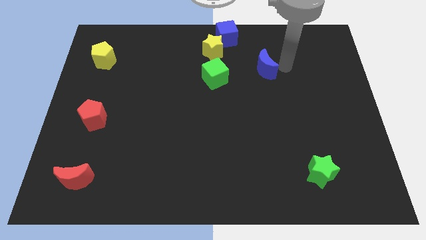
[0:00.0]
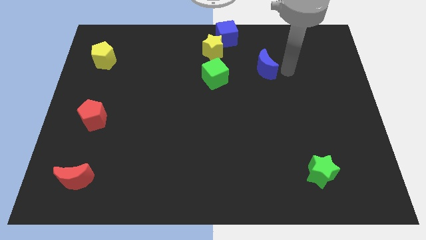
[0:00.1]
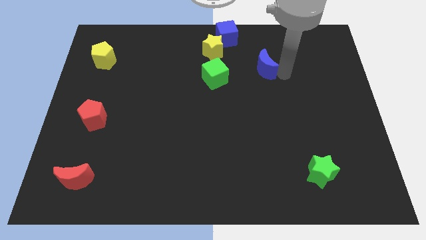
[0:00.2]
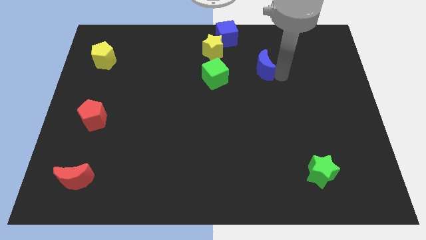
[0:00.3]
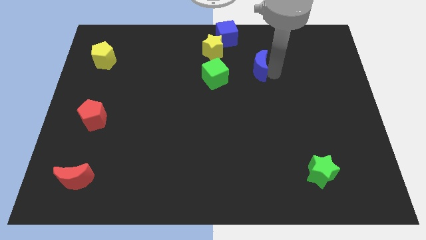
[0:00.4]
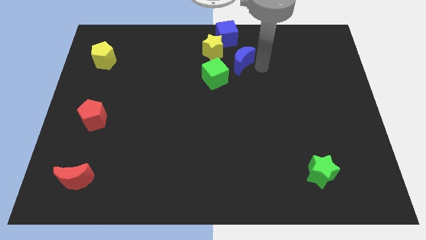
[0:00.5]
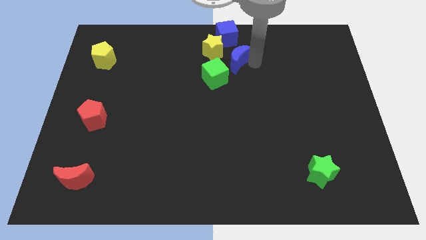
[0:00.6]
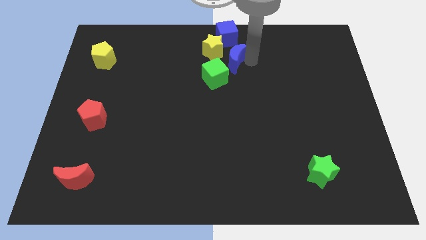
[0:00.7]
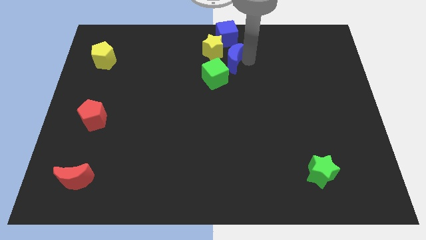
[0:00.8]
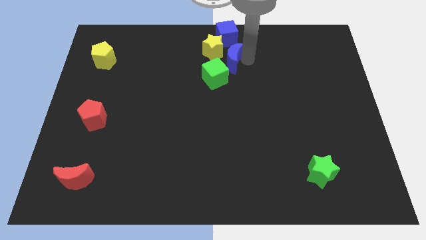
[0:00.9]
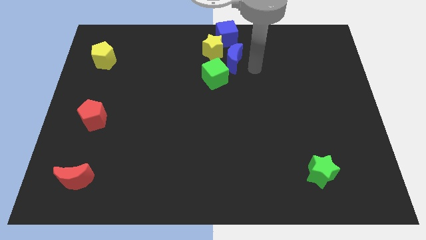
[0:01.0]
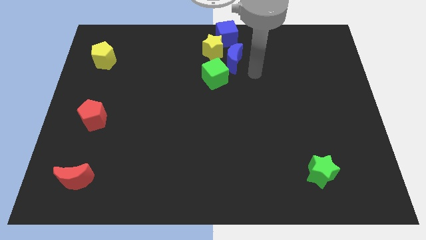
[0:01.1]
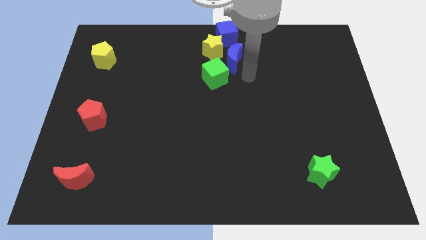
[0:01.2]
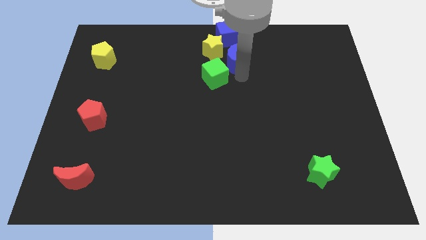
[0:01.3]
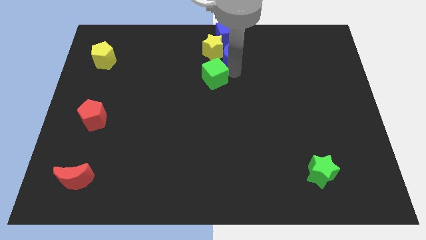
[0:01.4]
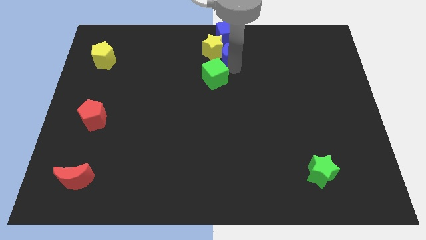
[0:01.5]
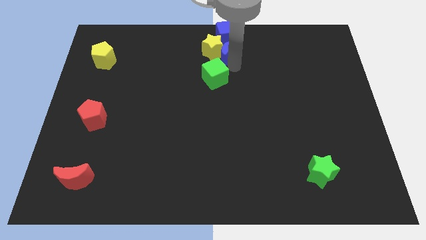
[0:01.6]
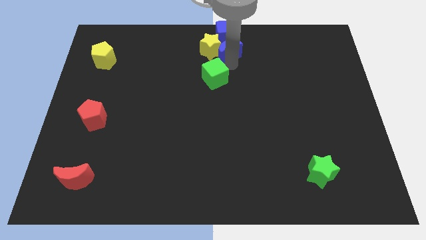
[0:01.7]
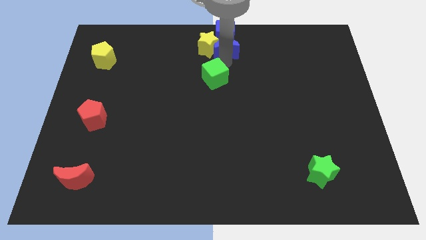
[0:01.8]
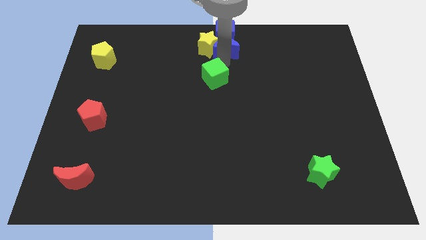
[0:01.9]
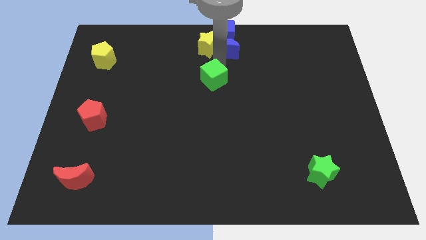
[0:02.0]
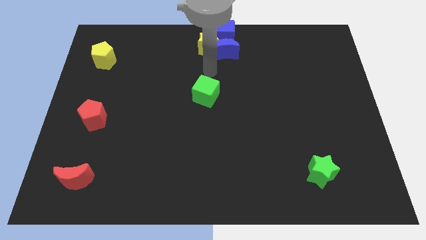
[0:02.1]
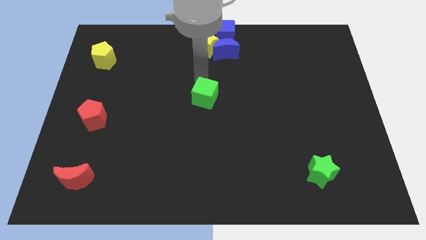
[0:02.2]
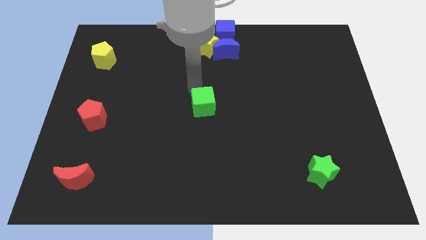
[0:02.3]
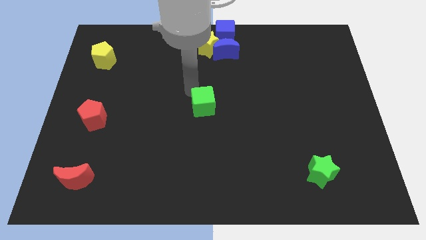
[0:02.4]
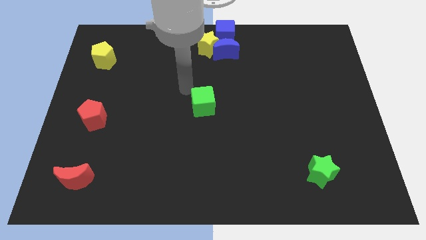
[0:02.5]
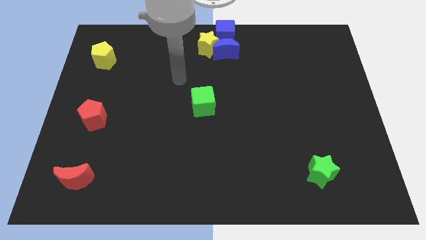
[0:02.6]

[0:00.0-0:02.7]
push green cube slightly towards down

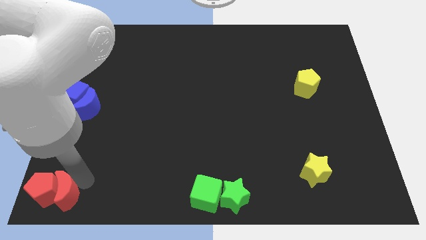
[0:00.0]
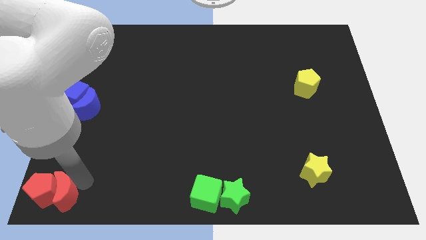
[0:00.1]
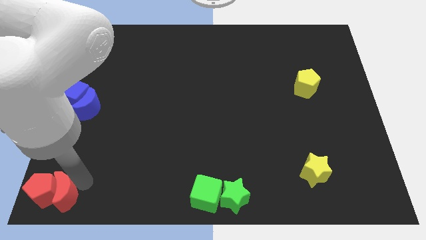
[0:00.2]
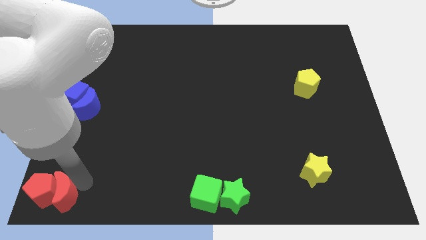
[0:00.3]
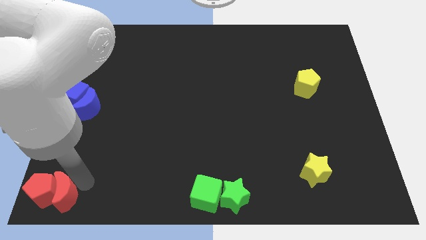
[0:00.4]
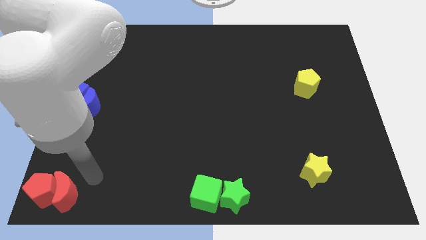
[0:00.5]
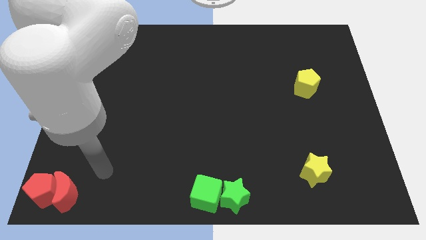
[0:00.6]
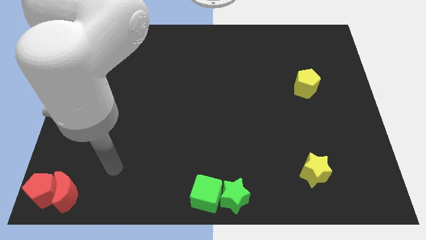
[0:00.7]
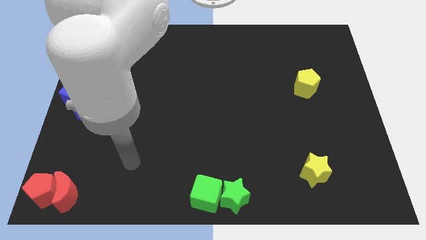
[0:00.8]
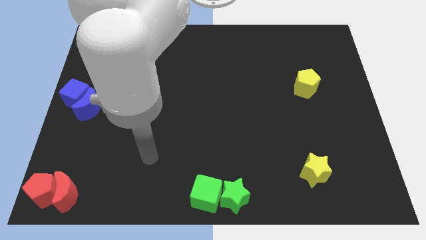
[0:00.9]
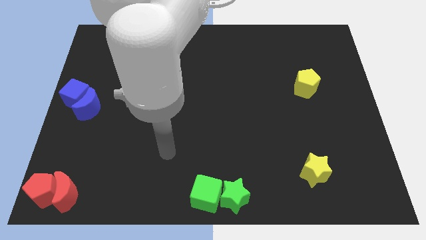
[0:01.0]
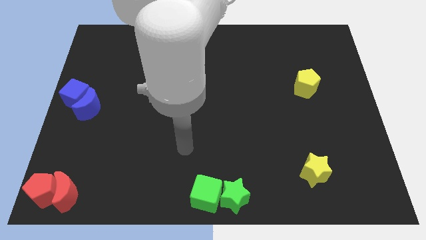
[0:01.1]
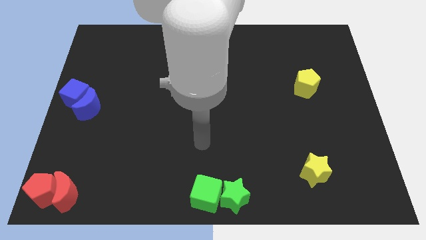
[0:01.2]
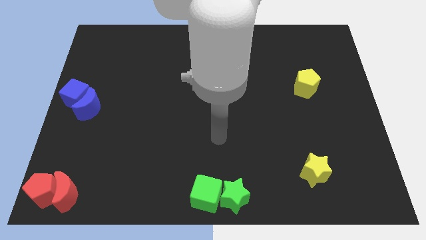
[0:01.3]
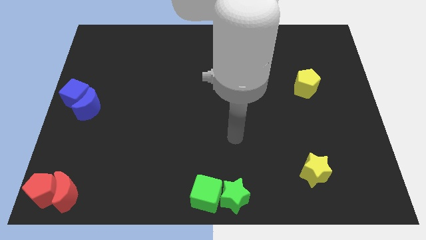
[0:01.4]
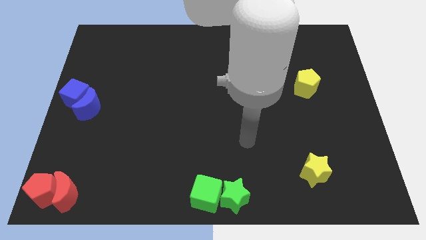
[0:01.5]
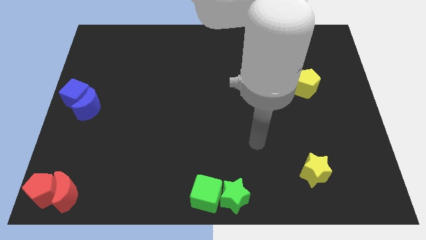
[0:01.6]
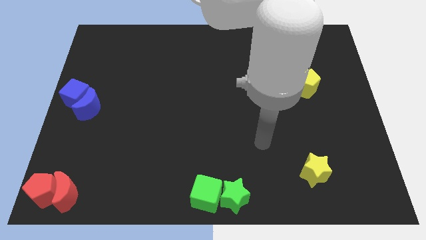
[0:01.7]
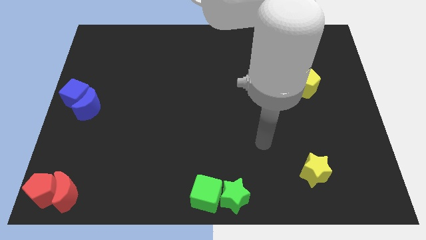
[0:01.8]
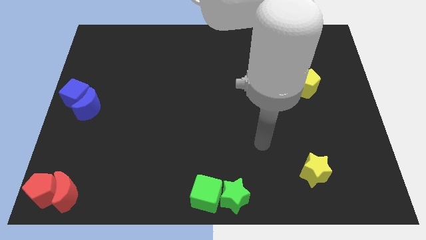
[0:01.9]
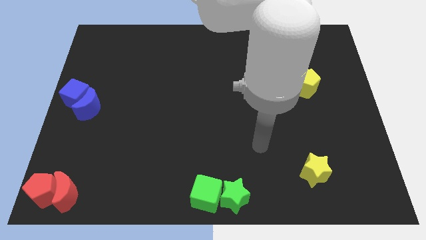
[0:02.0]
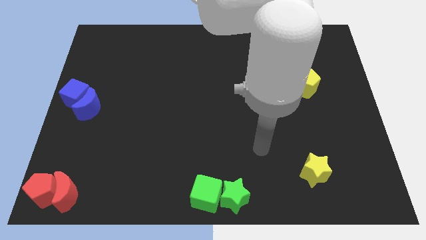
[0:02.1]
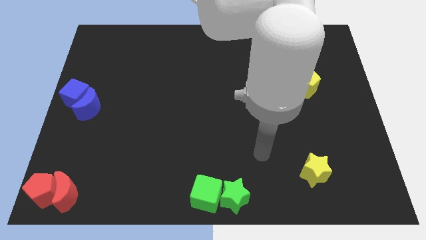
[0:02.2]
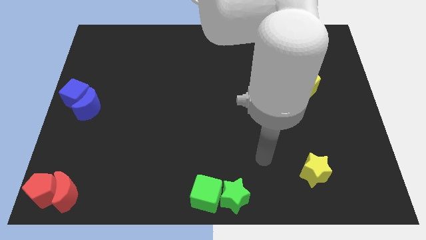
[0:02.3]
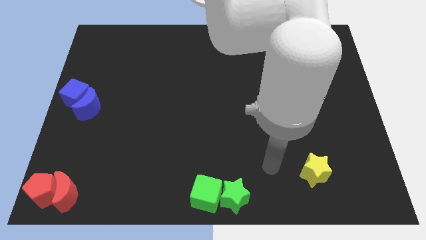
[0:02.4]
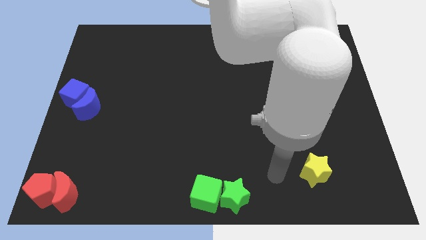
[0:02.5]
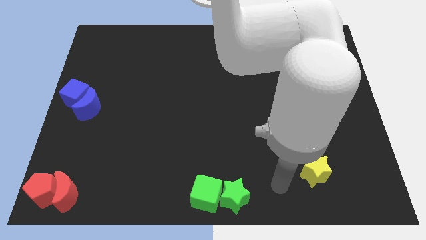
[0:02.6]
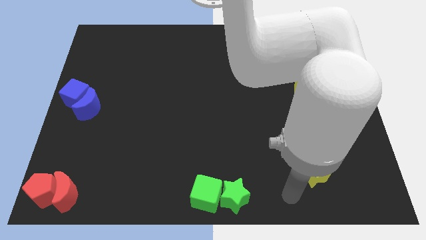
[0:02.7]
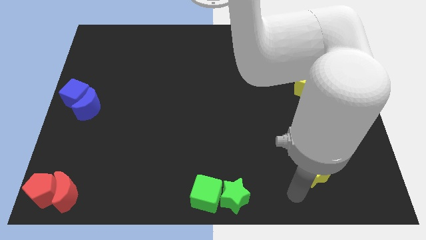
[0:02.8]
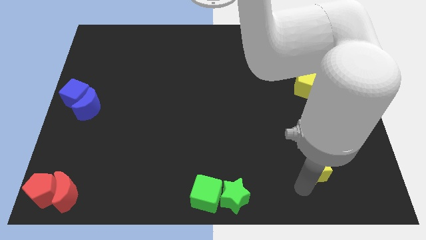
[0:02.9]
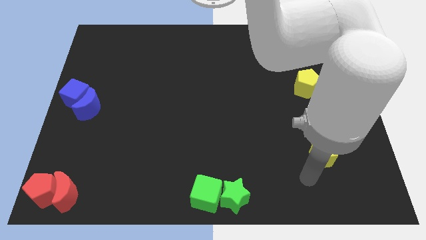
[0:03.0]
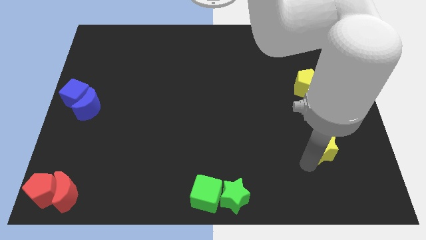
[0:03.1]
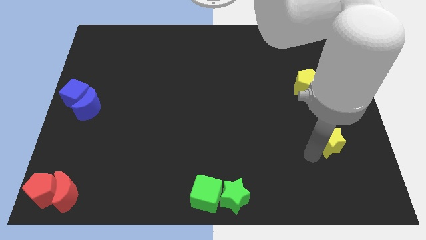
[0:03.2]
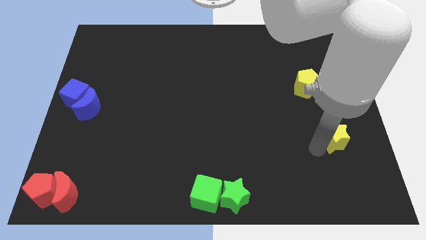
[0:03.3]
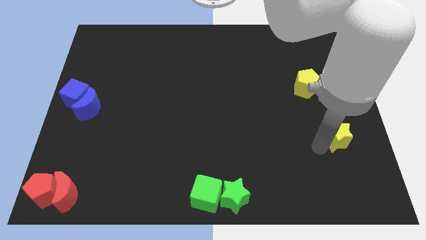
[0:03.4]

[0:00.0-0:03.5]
move the red blocks to the bottom left corner

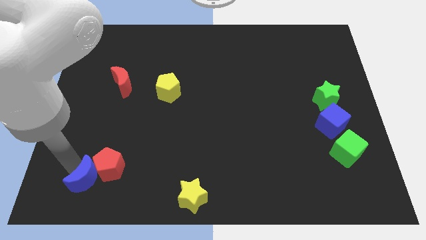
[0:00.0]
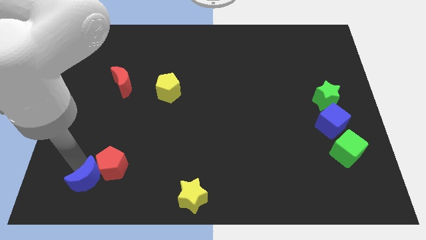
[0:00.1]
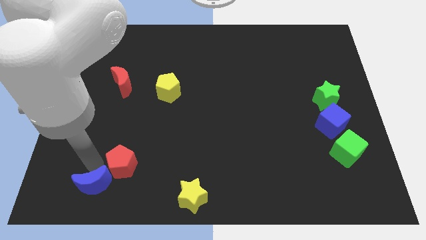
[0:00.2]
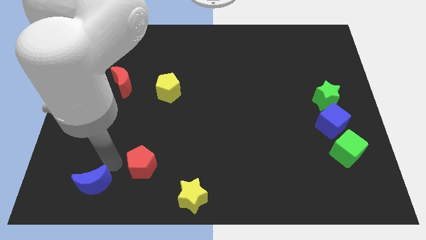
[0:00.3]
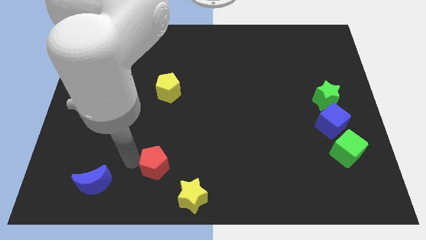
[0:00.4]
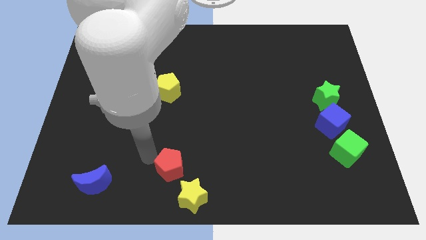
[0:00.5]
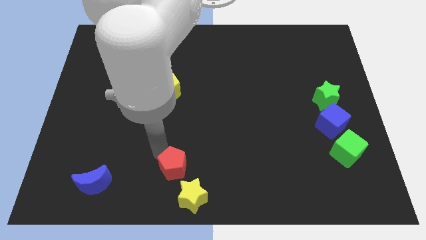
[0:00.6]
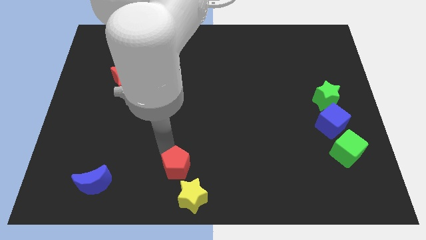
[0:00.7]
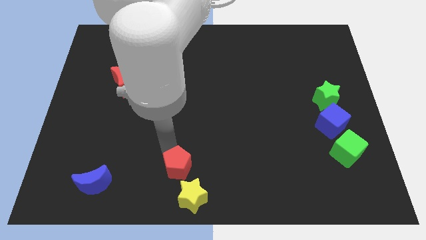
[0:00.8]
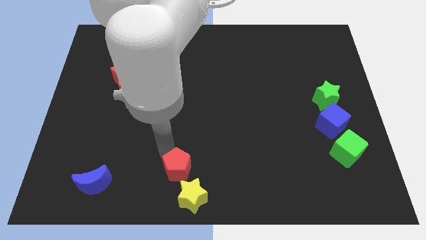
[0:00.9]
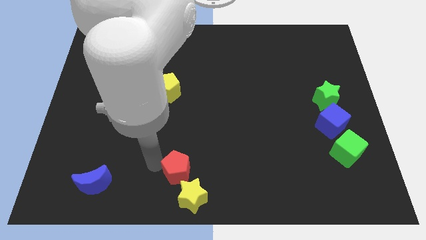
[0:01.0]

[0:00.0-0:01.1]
push the red pentagon top left to the yellow star

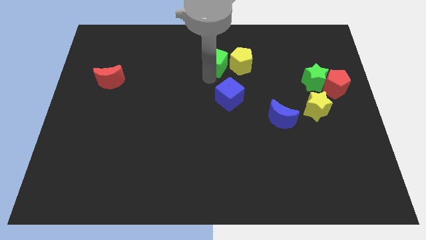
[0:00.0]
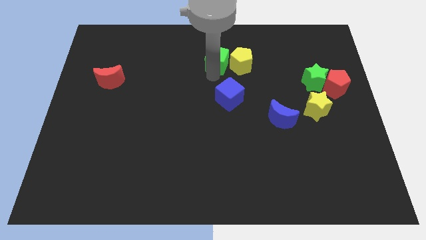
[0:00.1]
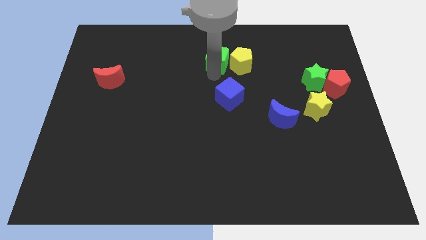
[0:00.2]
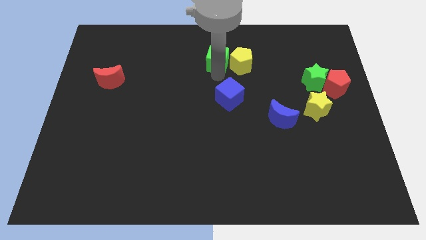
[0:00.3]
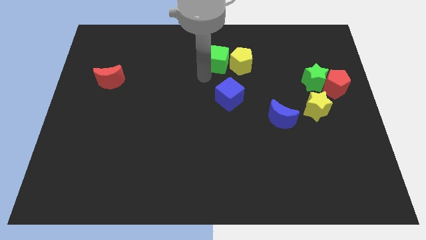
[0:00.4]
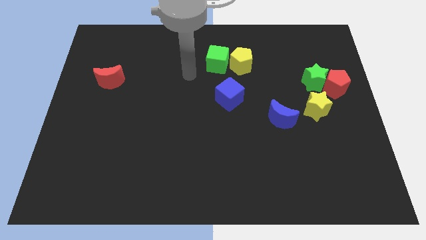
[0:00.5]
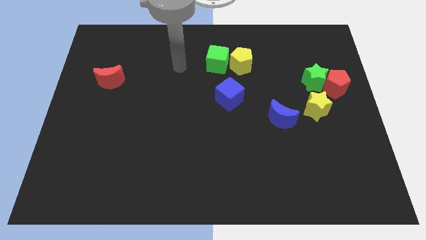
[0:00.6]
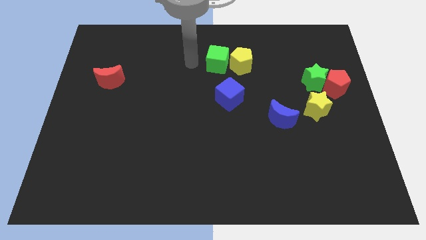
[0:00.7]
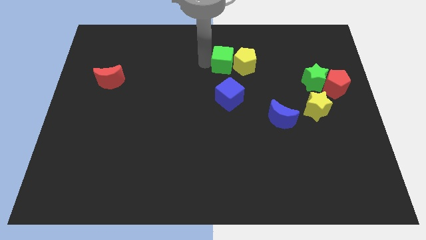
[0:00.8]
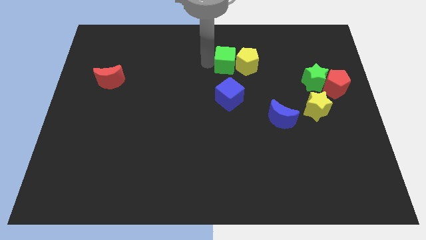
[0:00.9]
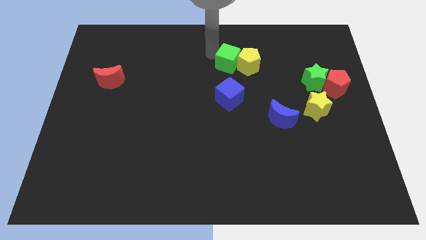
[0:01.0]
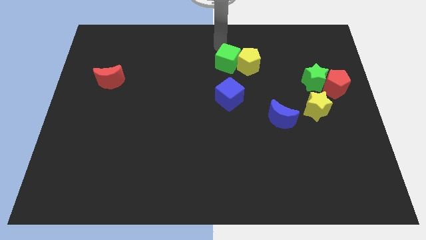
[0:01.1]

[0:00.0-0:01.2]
move the green cube slightly into the yellow pentagon

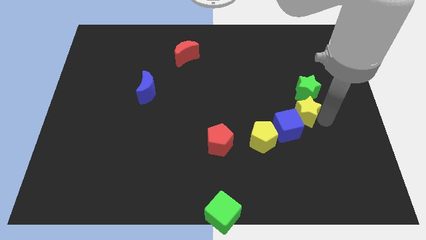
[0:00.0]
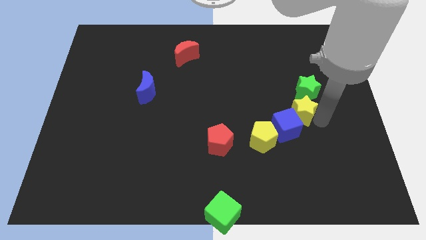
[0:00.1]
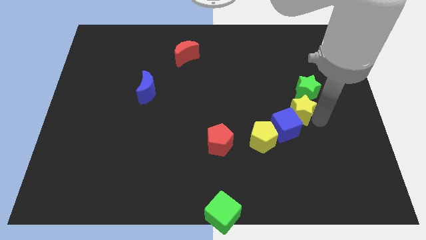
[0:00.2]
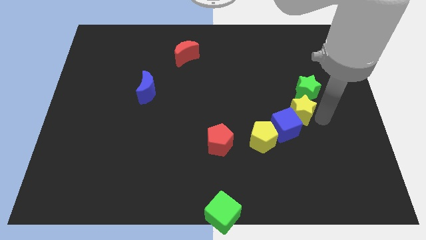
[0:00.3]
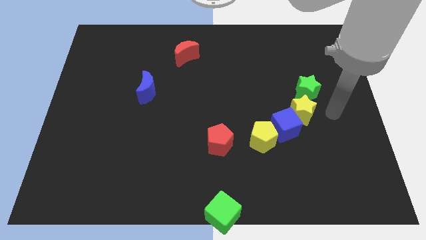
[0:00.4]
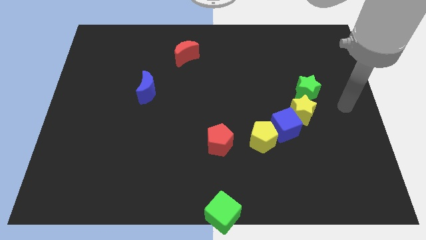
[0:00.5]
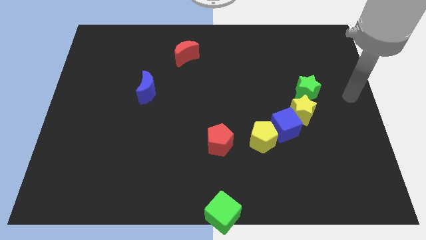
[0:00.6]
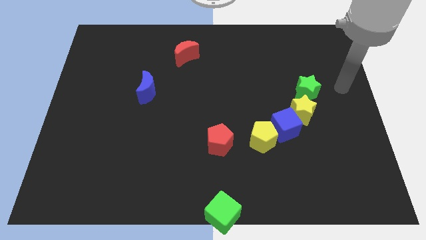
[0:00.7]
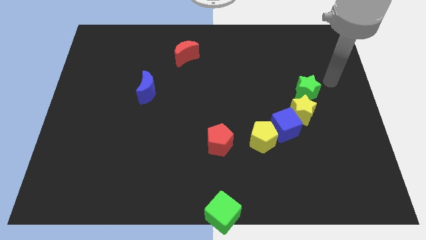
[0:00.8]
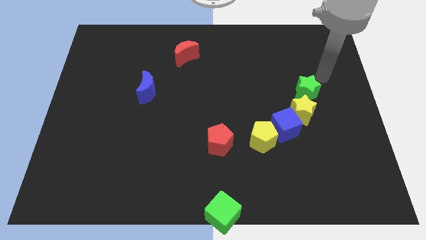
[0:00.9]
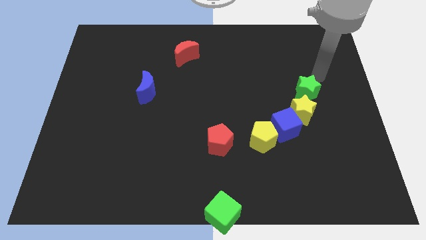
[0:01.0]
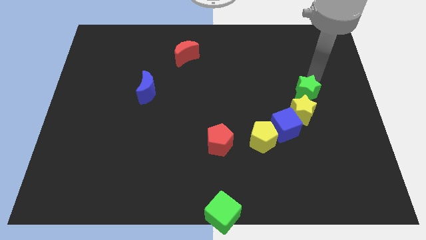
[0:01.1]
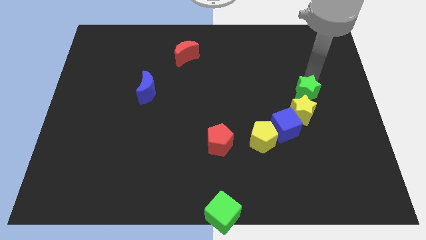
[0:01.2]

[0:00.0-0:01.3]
place your arm above the green star
